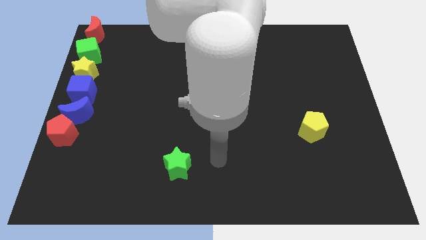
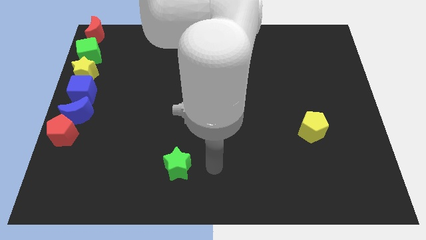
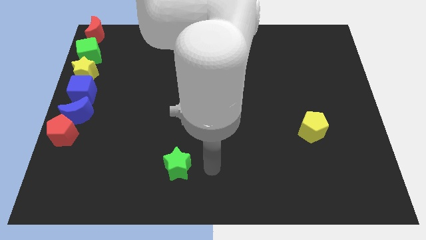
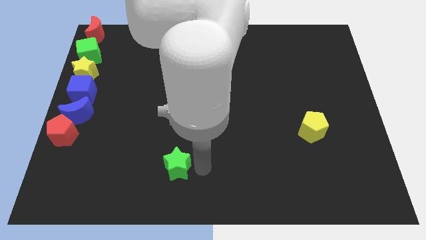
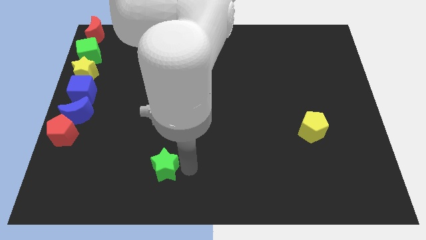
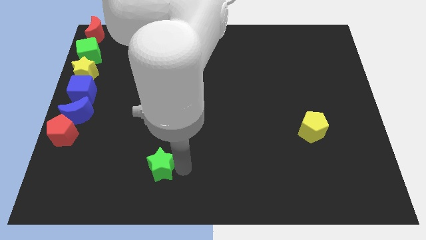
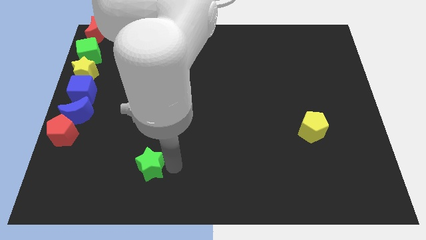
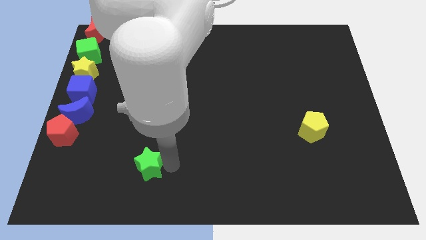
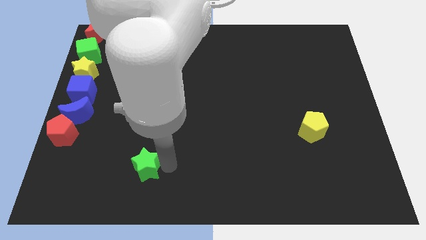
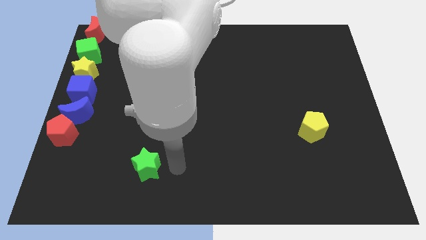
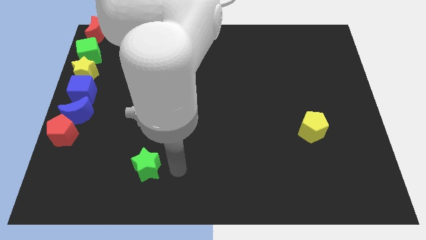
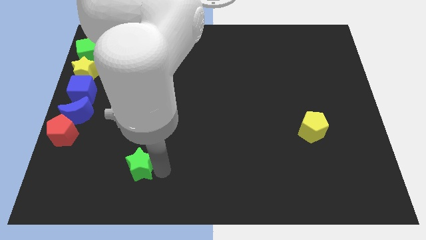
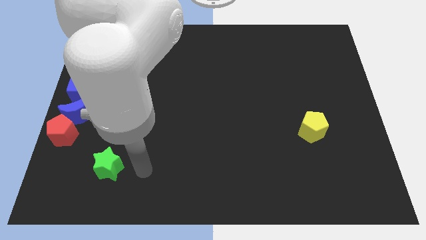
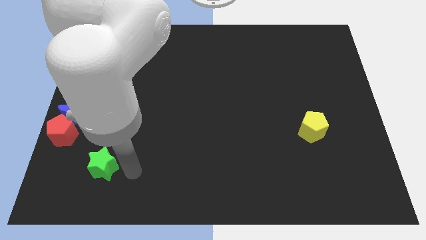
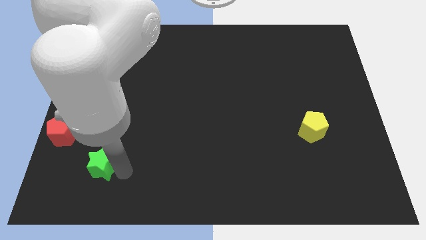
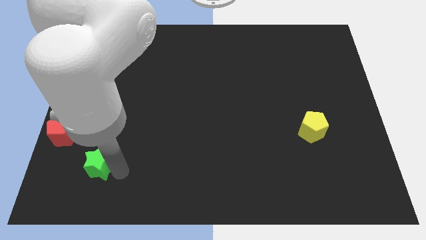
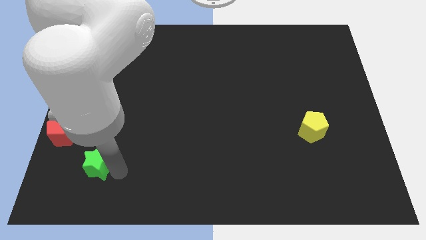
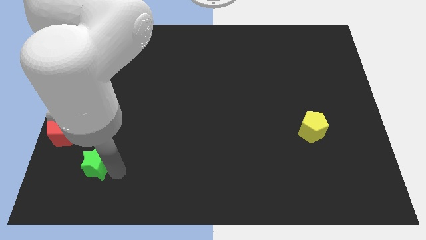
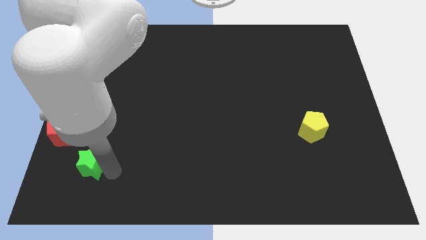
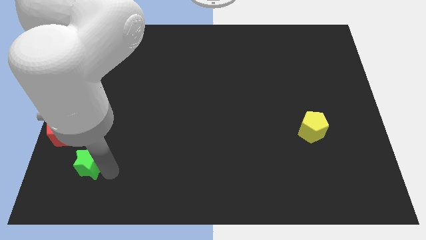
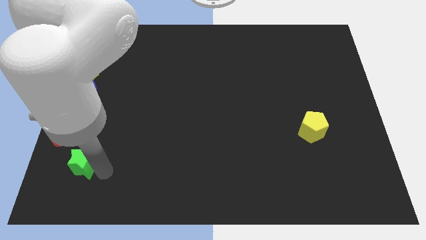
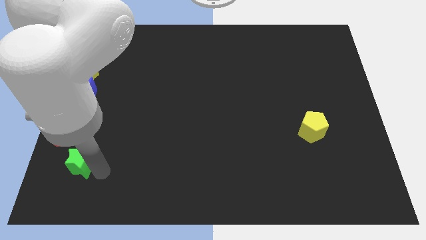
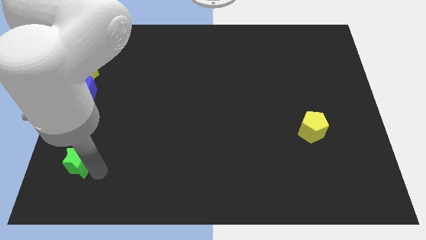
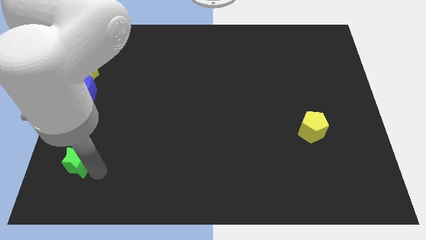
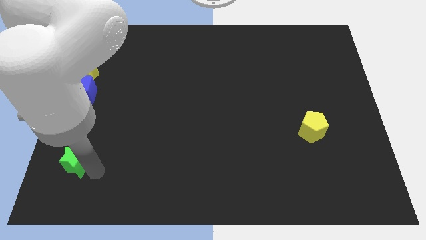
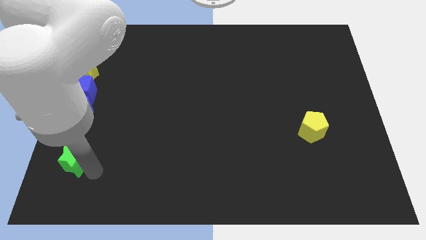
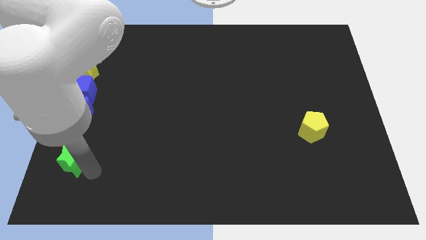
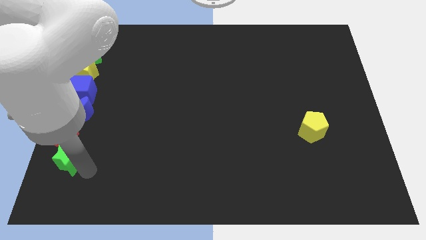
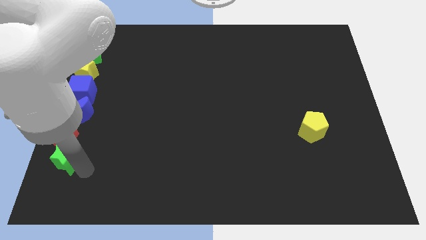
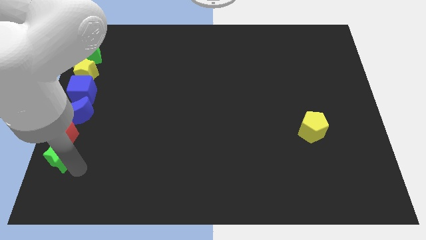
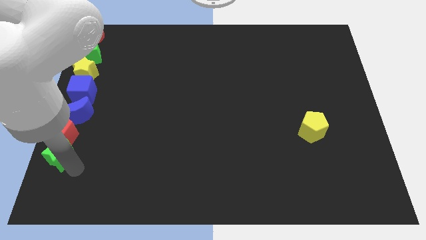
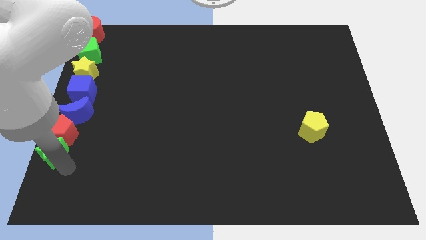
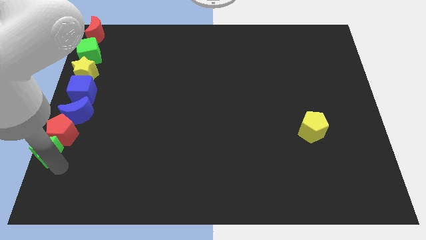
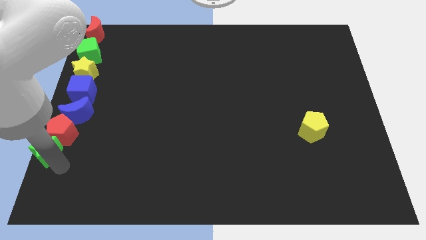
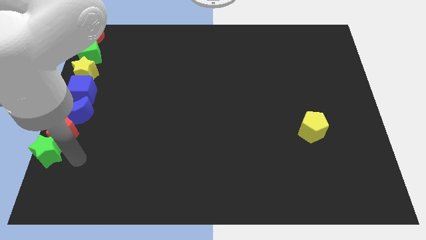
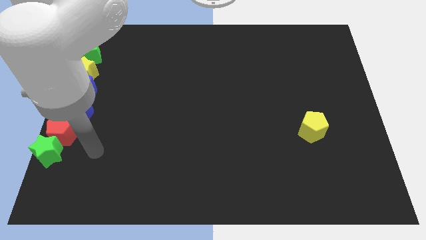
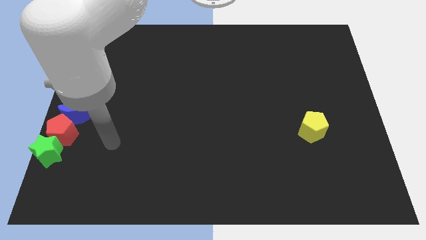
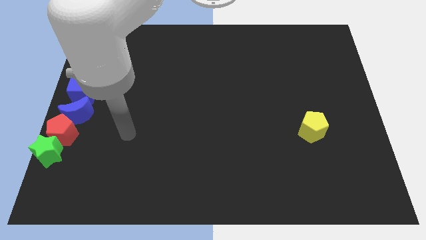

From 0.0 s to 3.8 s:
slide the green star to the left

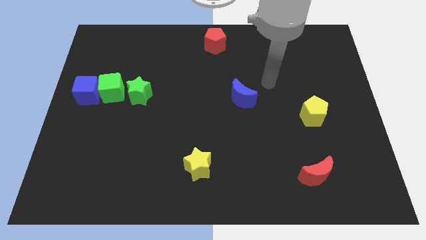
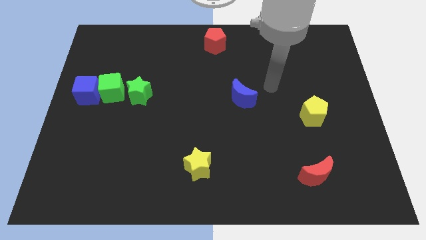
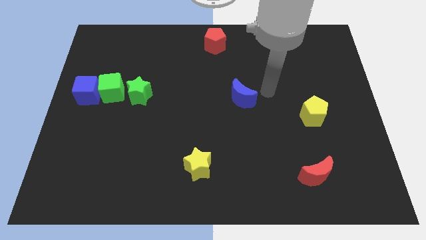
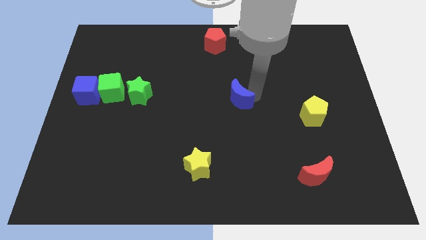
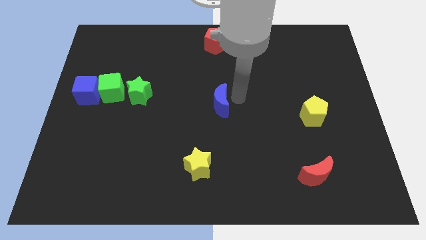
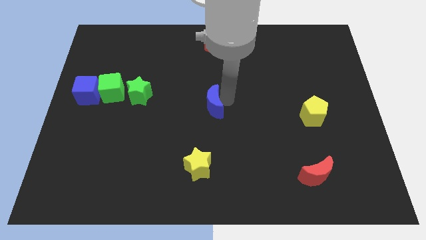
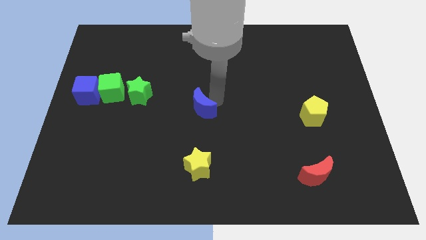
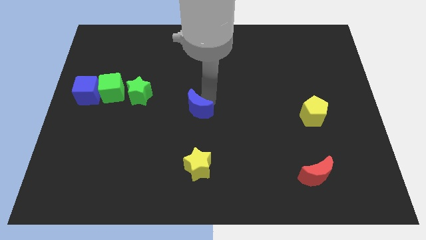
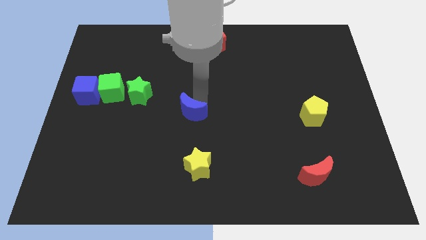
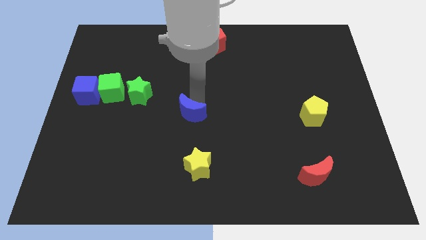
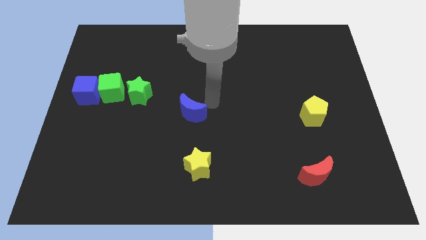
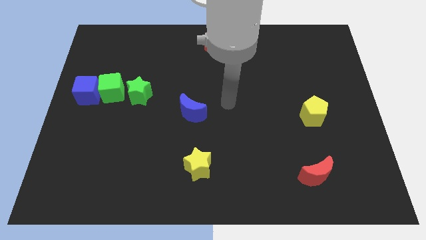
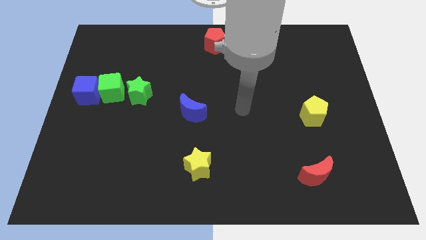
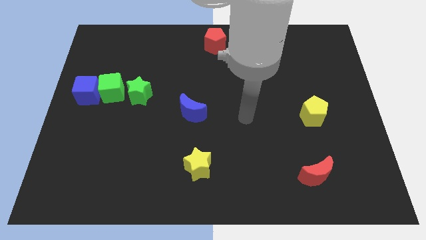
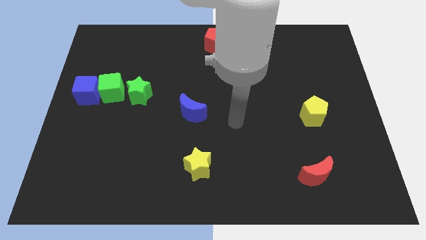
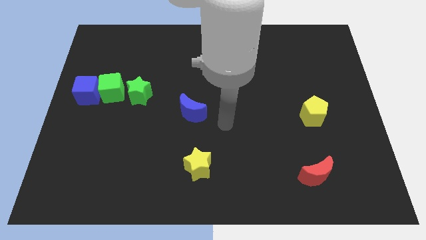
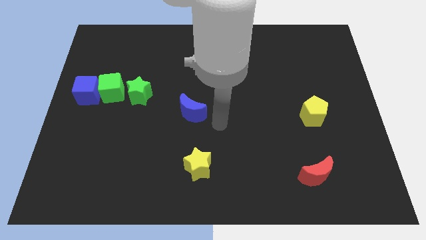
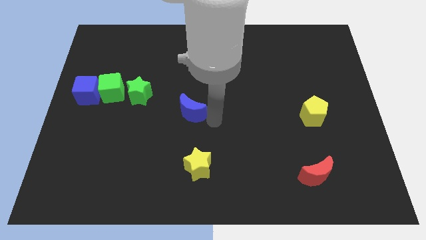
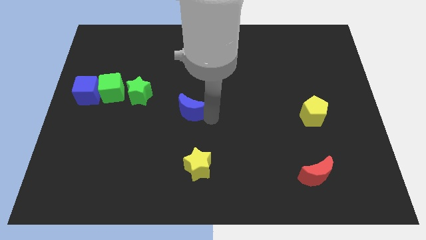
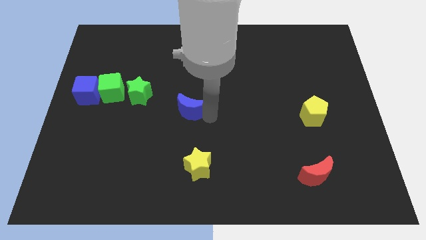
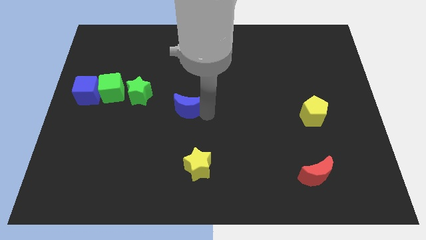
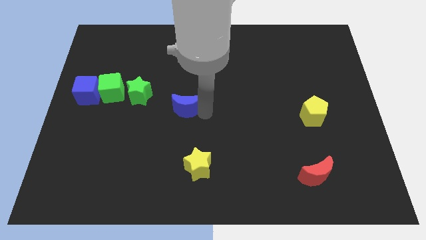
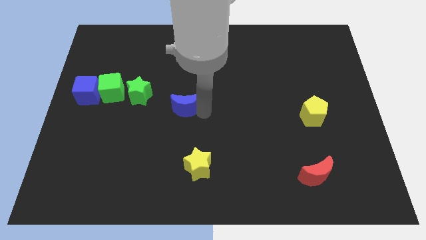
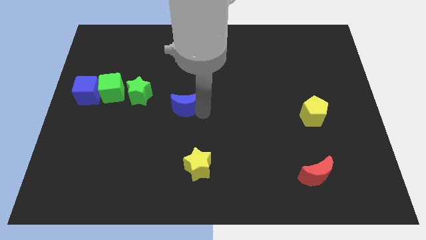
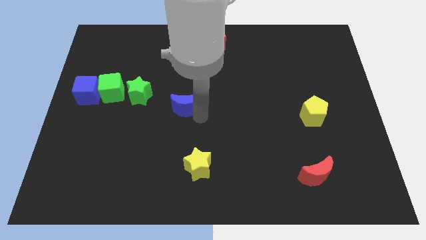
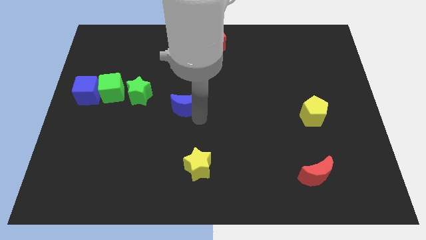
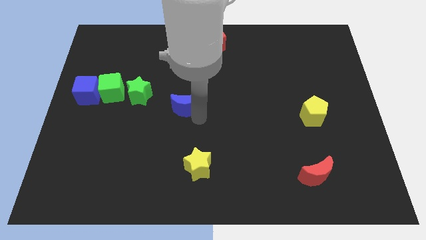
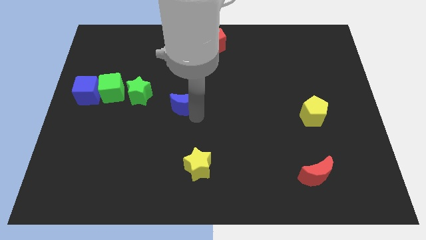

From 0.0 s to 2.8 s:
put blue moon above yellow star

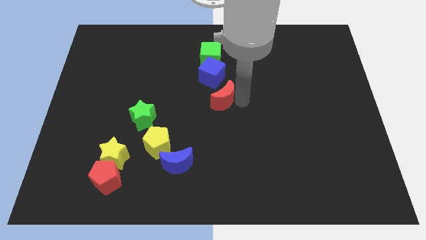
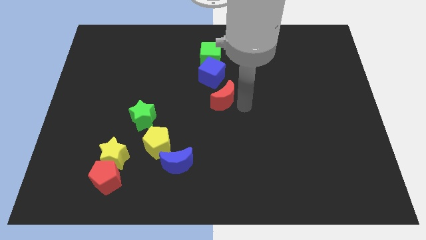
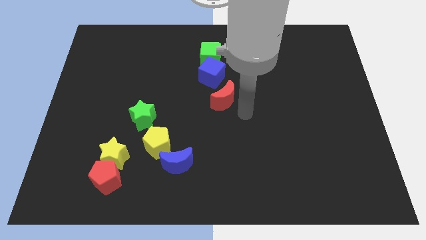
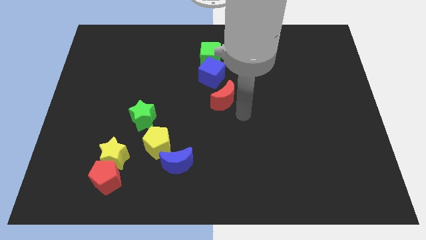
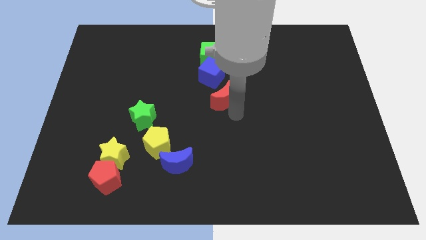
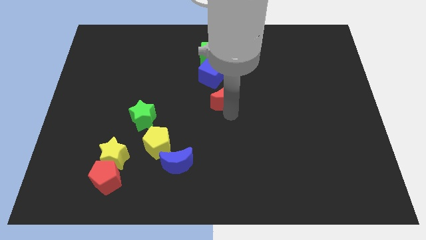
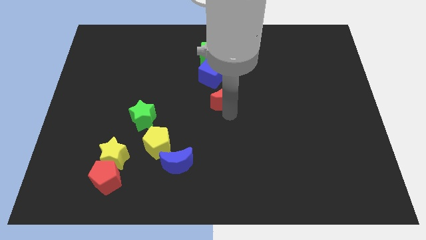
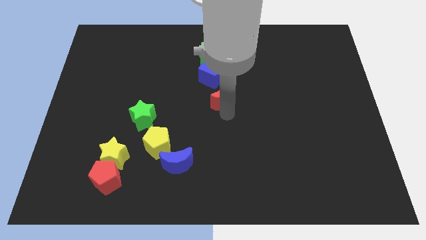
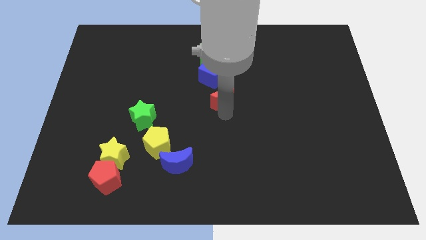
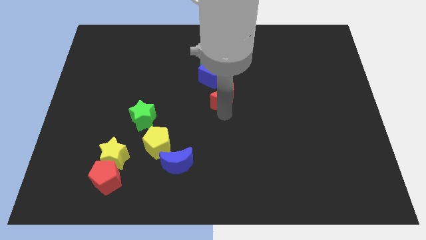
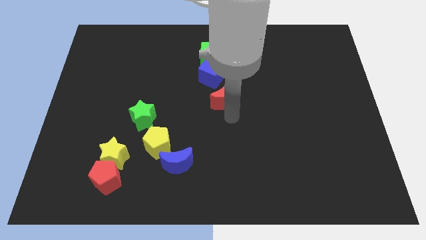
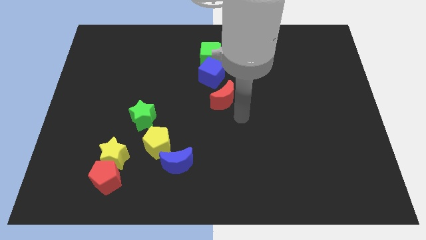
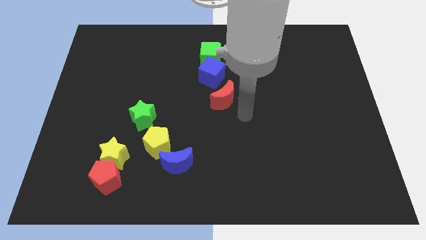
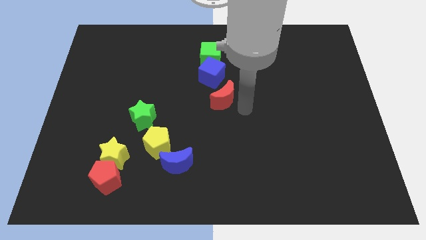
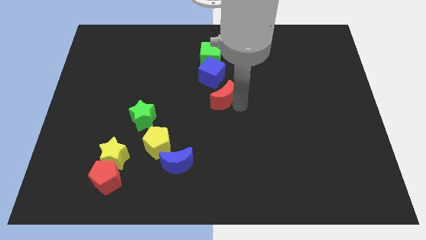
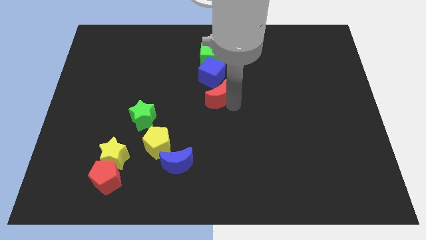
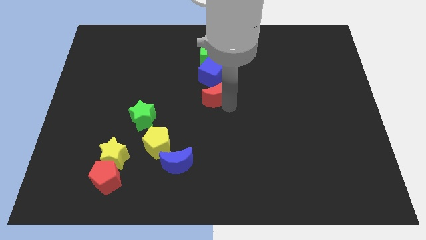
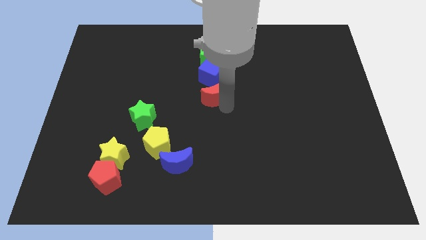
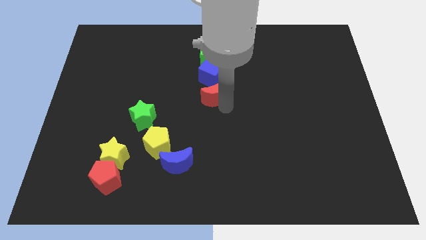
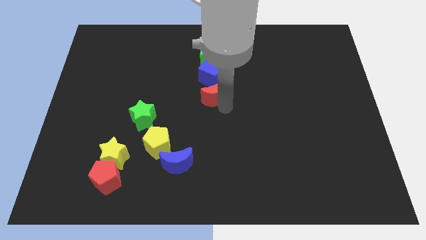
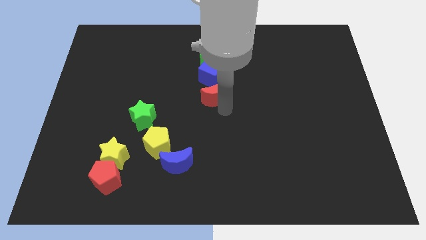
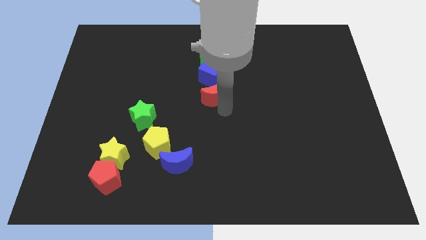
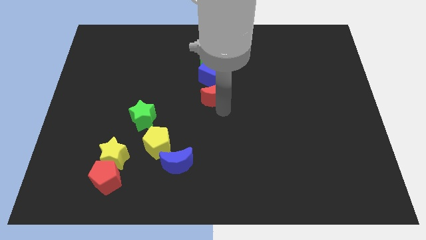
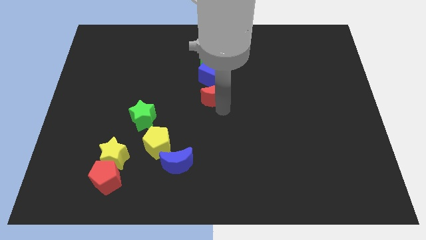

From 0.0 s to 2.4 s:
place the red crescent to the bottom of the blue cube
